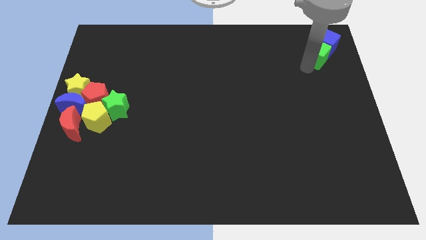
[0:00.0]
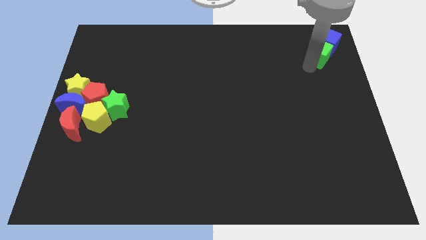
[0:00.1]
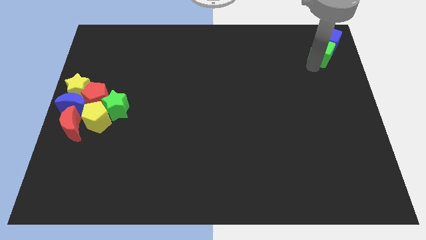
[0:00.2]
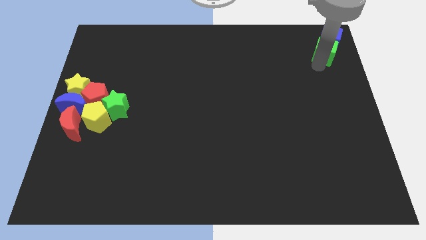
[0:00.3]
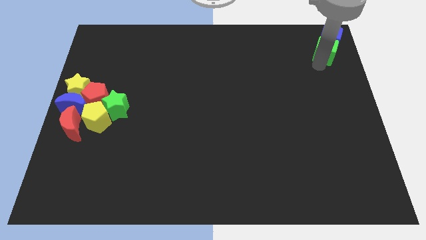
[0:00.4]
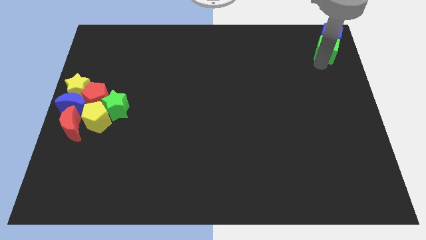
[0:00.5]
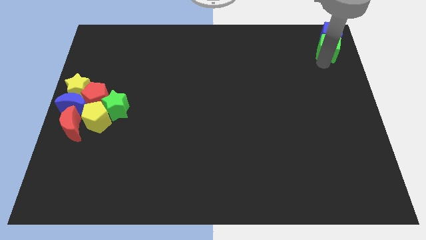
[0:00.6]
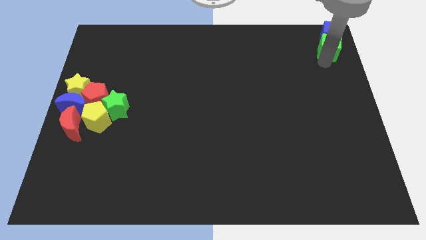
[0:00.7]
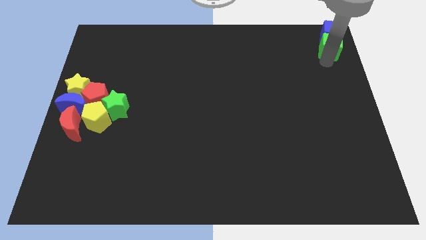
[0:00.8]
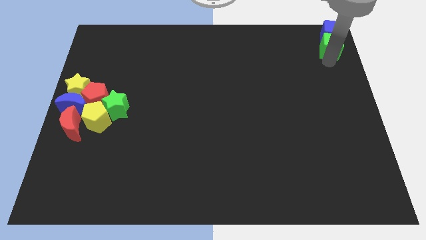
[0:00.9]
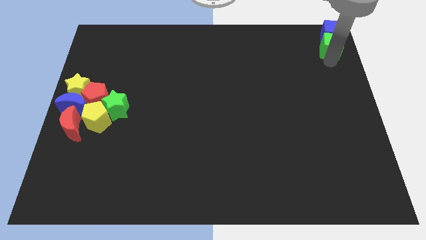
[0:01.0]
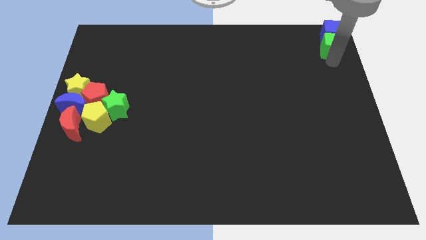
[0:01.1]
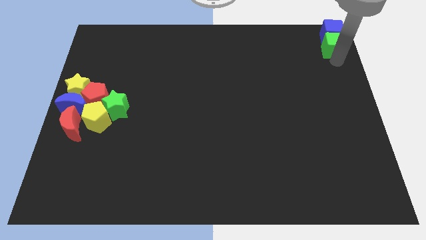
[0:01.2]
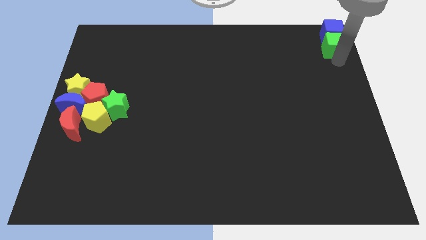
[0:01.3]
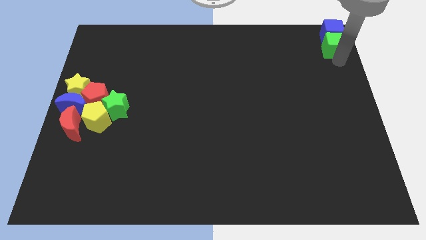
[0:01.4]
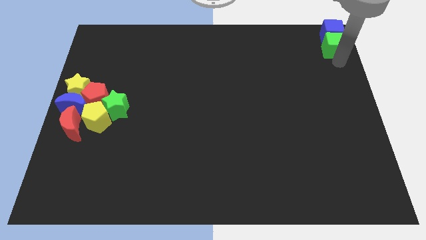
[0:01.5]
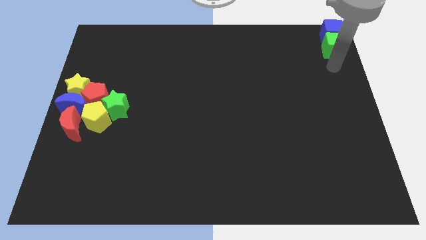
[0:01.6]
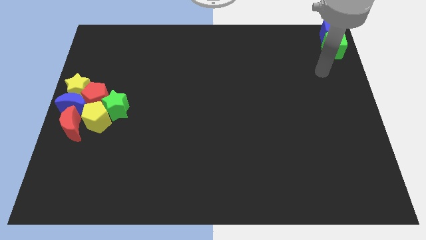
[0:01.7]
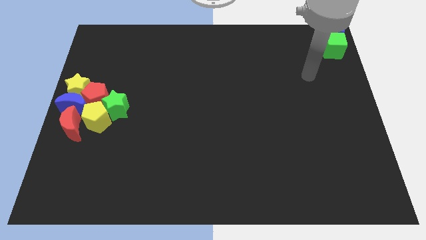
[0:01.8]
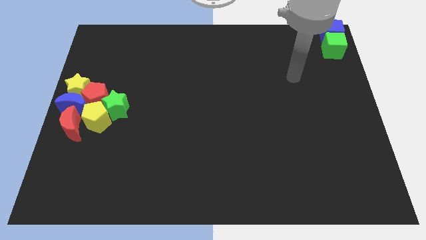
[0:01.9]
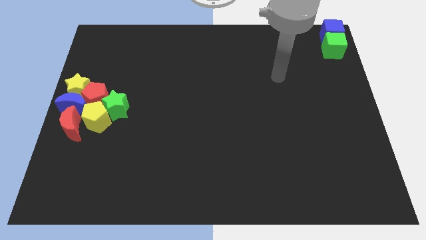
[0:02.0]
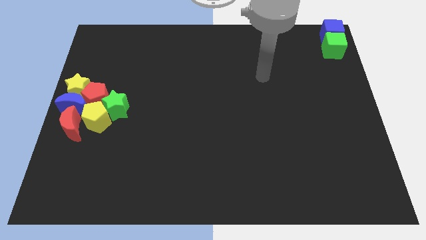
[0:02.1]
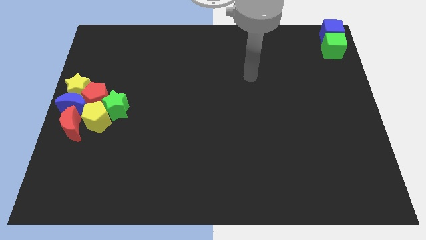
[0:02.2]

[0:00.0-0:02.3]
place the green cube and blue cube at the top right corner of the board

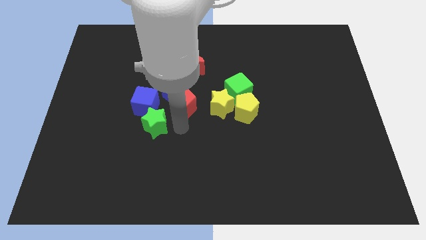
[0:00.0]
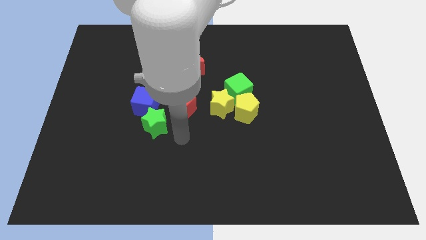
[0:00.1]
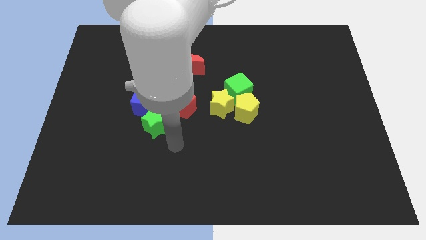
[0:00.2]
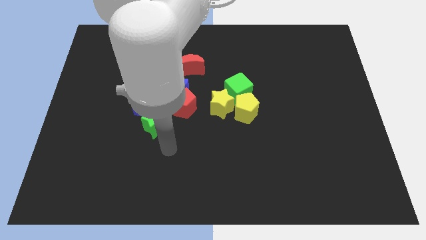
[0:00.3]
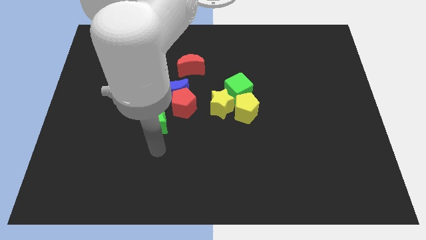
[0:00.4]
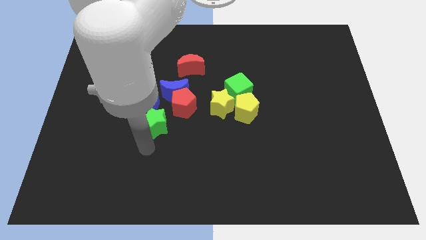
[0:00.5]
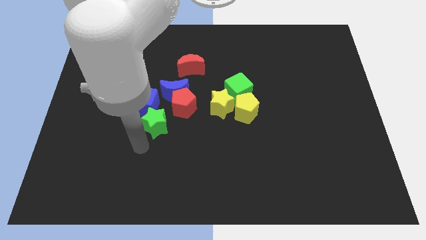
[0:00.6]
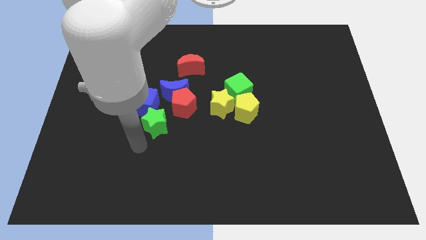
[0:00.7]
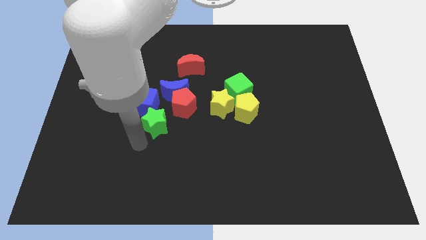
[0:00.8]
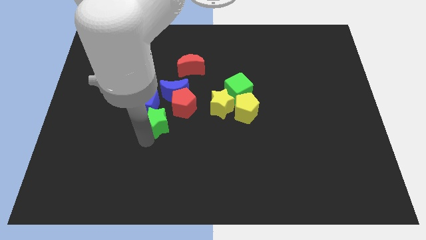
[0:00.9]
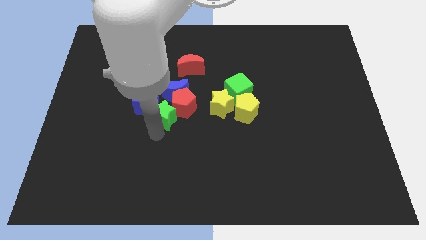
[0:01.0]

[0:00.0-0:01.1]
move the arm to the bottom of green star

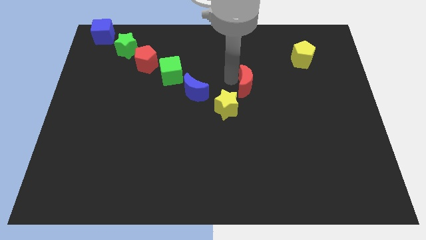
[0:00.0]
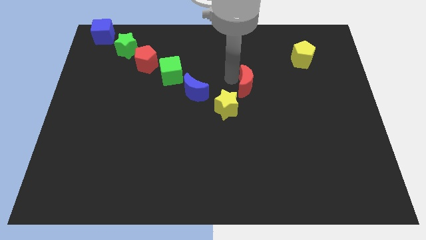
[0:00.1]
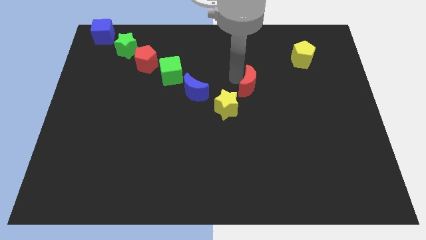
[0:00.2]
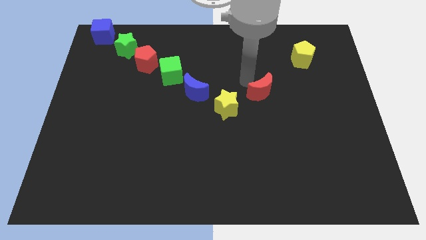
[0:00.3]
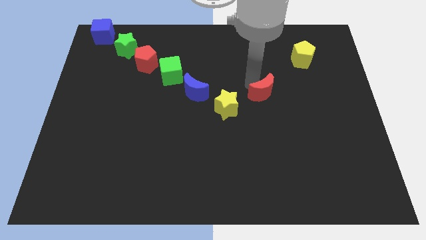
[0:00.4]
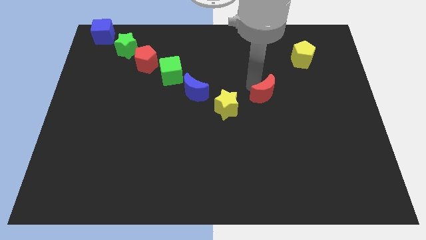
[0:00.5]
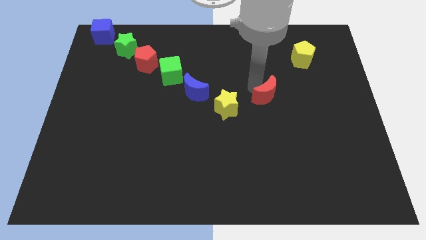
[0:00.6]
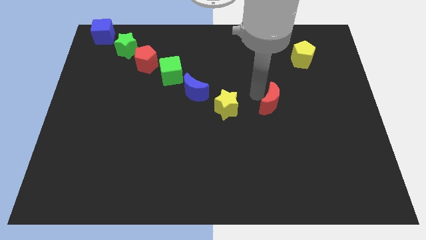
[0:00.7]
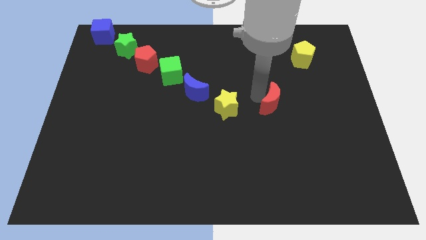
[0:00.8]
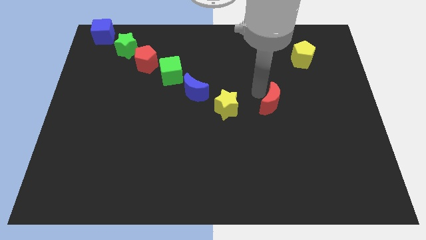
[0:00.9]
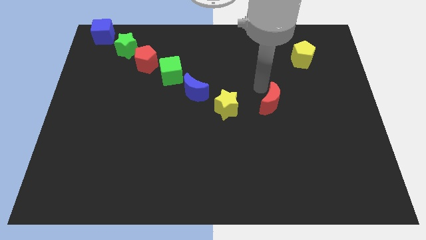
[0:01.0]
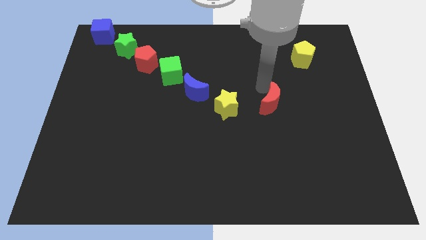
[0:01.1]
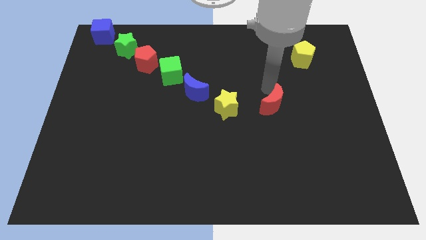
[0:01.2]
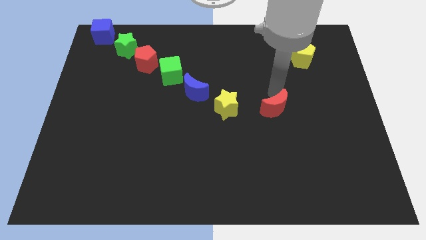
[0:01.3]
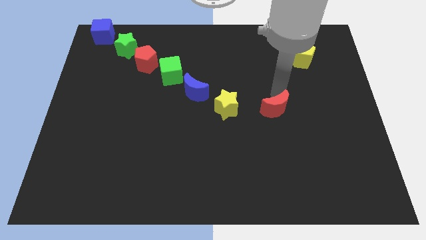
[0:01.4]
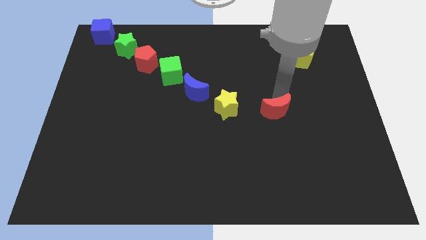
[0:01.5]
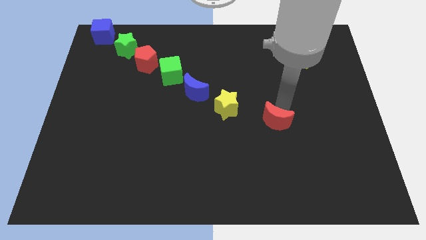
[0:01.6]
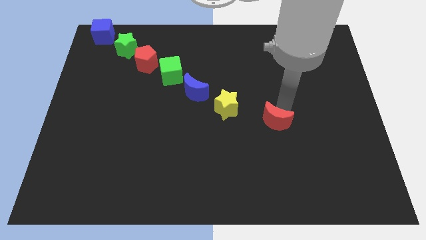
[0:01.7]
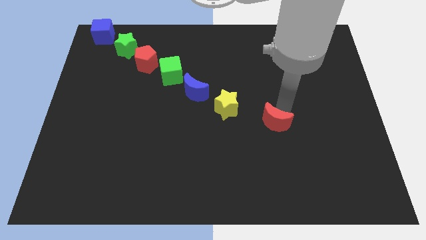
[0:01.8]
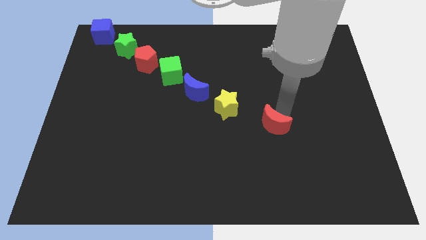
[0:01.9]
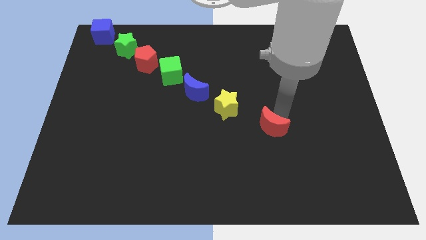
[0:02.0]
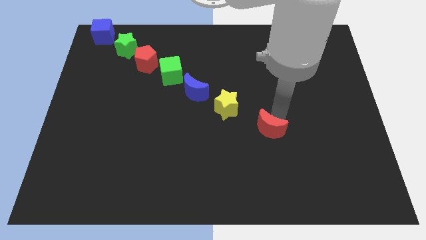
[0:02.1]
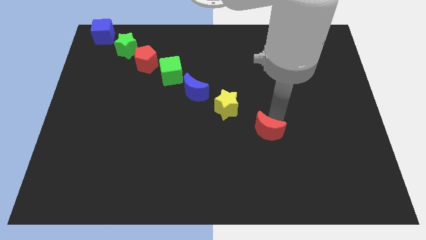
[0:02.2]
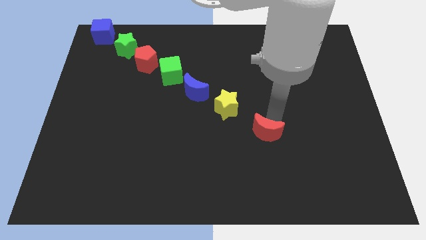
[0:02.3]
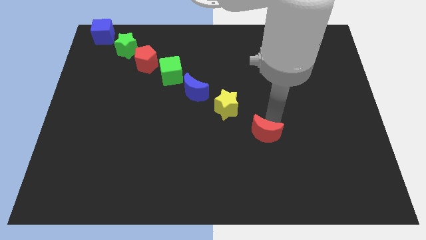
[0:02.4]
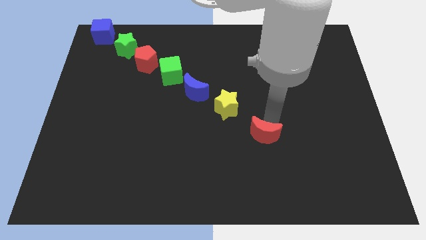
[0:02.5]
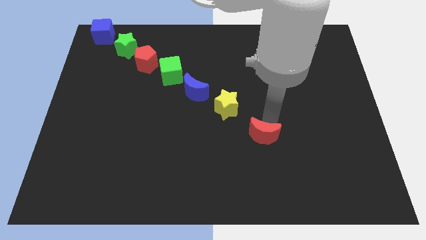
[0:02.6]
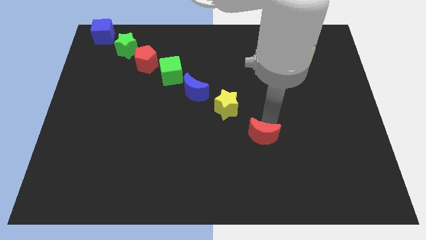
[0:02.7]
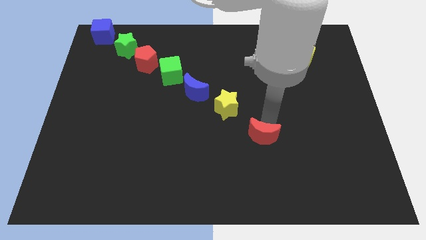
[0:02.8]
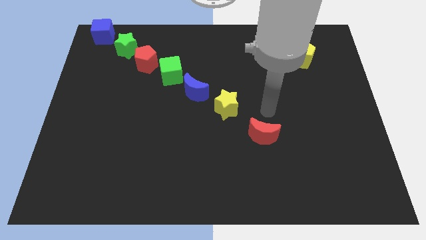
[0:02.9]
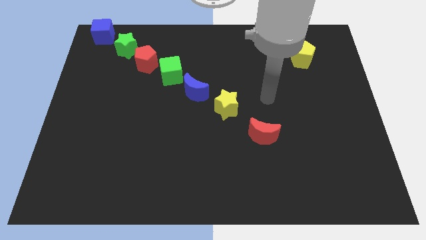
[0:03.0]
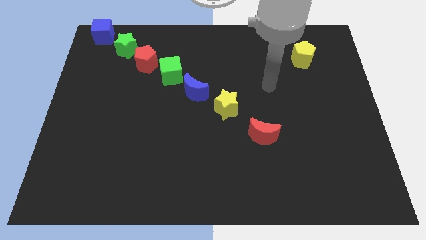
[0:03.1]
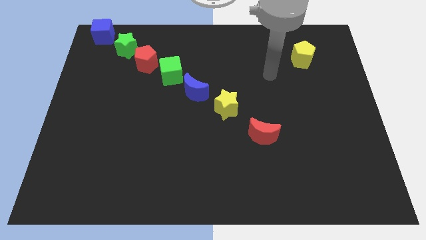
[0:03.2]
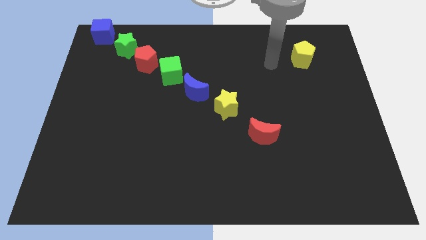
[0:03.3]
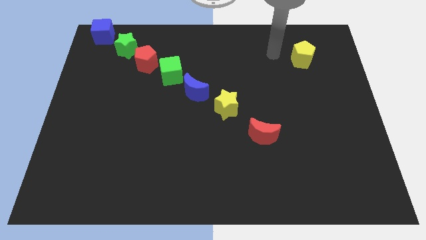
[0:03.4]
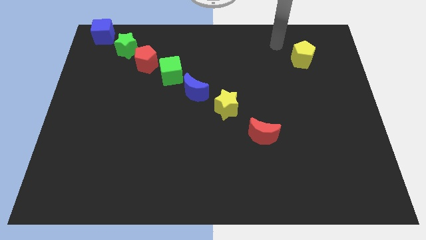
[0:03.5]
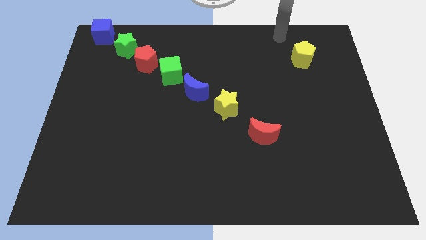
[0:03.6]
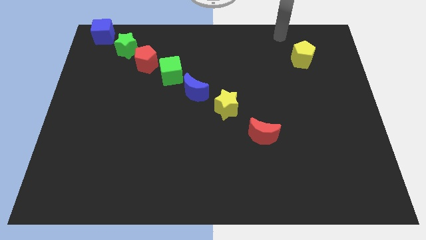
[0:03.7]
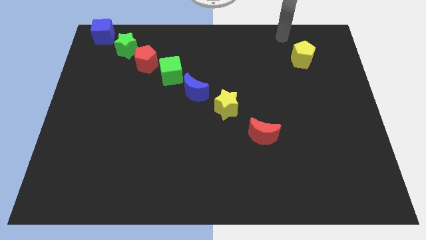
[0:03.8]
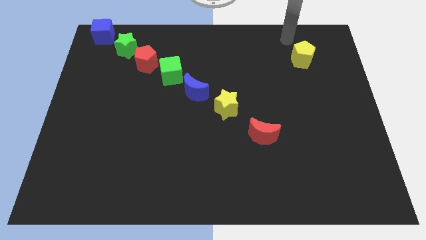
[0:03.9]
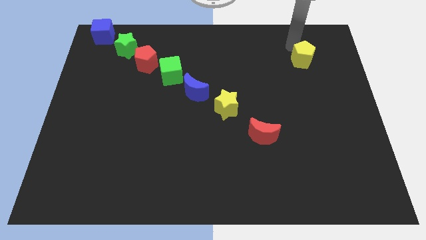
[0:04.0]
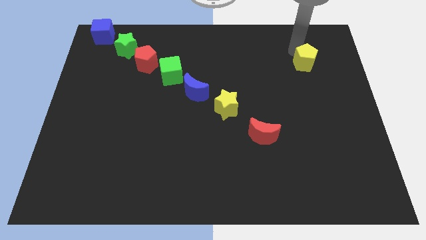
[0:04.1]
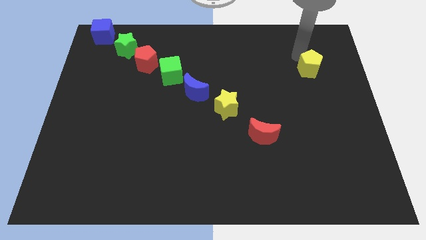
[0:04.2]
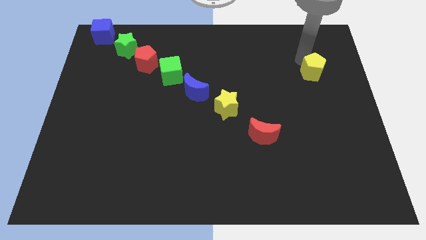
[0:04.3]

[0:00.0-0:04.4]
move the red moon below the yellow star

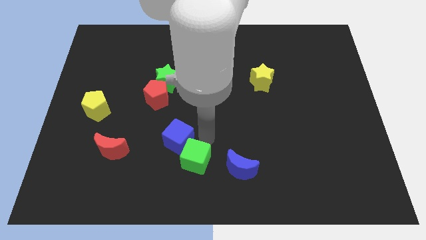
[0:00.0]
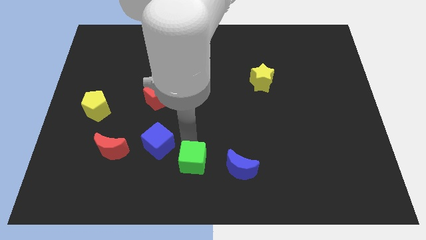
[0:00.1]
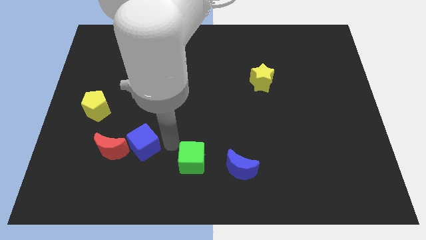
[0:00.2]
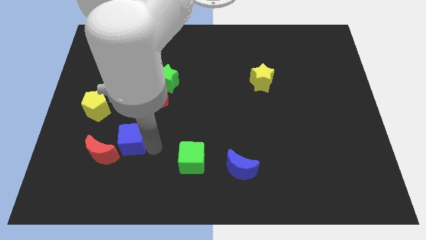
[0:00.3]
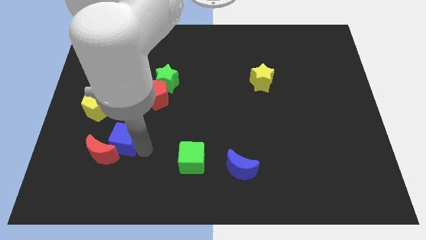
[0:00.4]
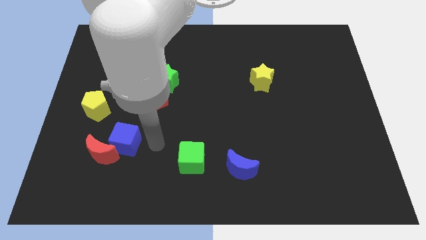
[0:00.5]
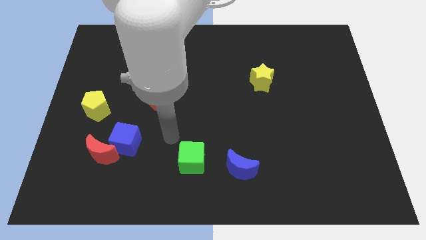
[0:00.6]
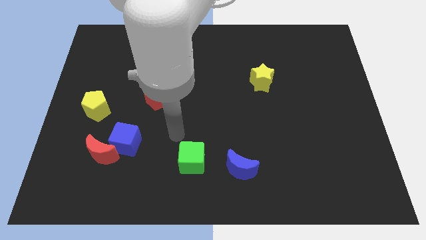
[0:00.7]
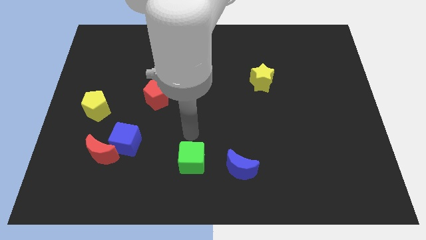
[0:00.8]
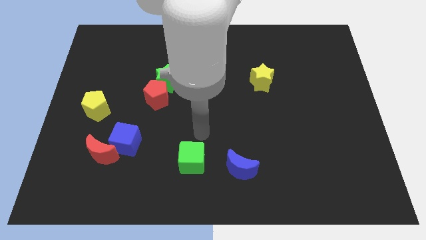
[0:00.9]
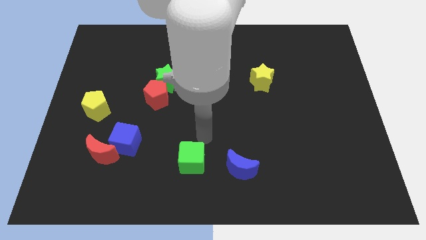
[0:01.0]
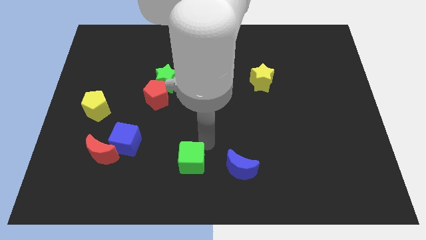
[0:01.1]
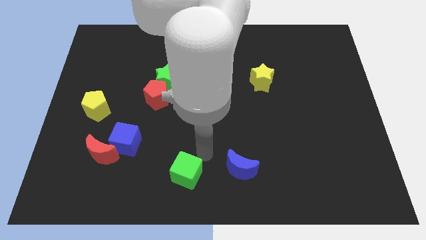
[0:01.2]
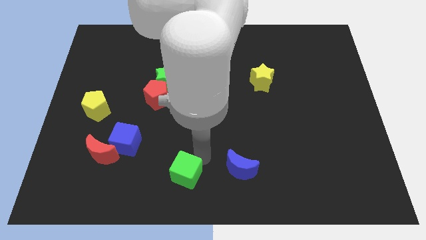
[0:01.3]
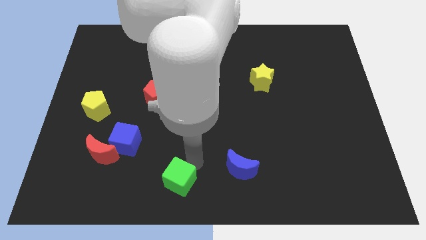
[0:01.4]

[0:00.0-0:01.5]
move the blue cube close to red crescent bottom left of the board
